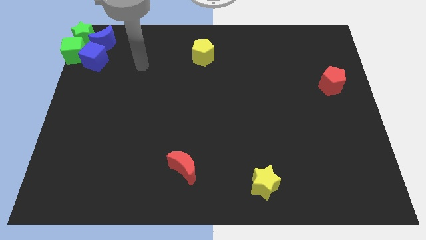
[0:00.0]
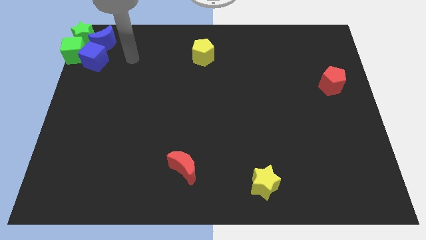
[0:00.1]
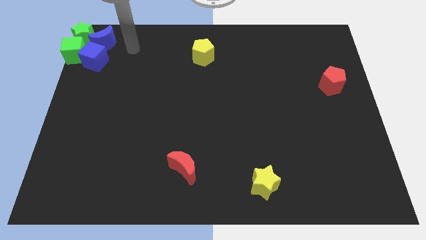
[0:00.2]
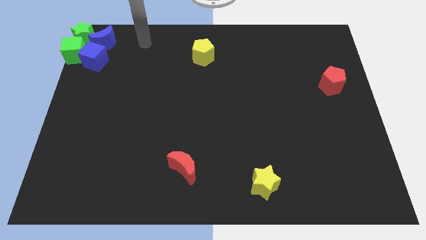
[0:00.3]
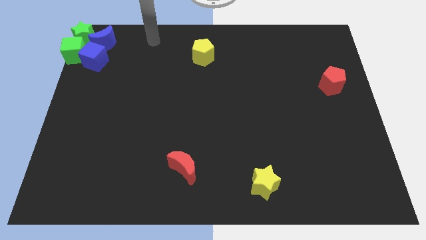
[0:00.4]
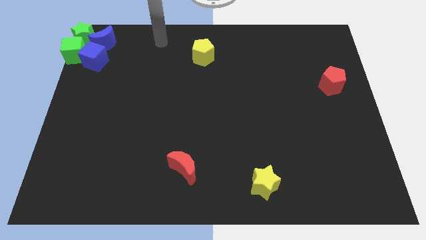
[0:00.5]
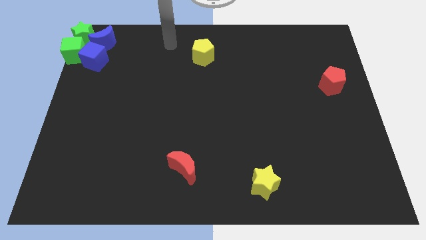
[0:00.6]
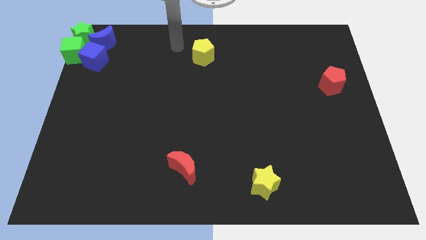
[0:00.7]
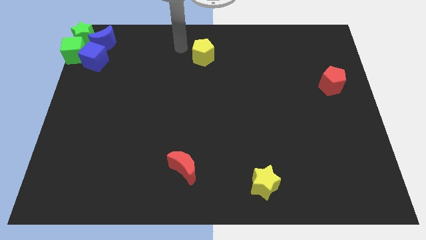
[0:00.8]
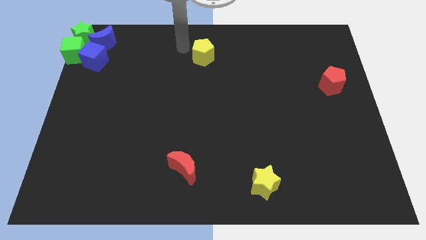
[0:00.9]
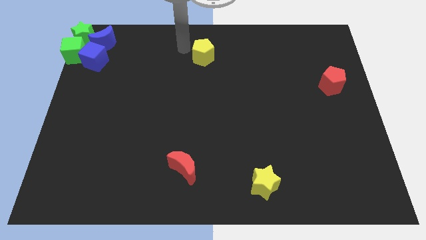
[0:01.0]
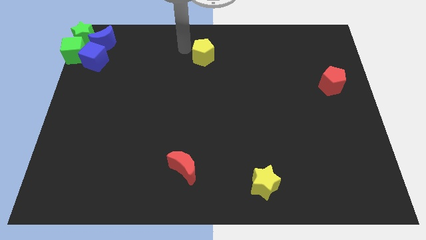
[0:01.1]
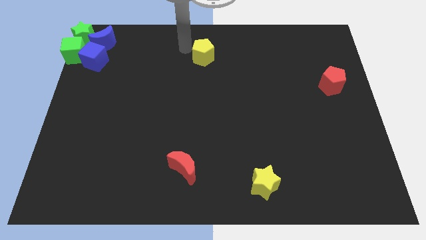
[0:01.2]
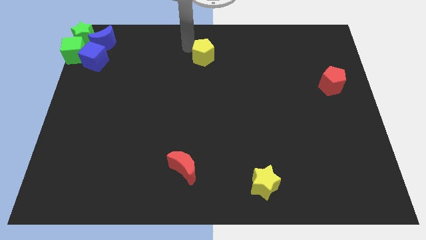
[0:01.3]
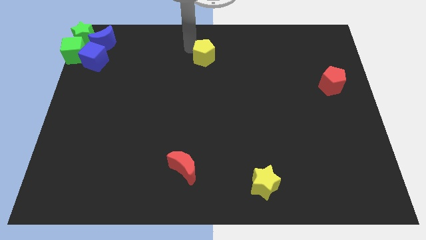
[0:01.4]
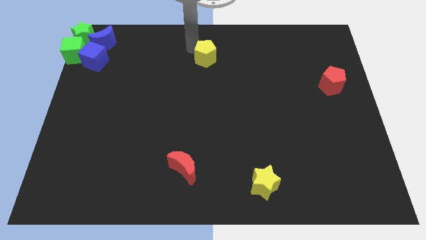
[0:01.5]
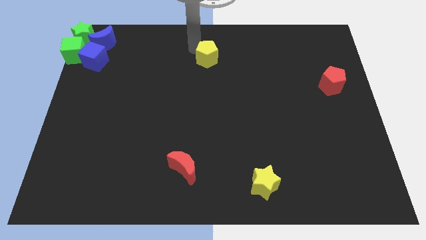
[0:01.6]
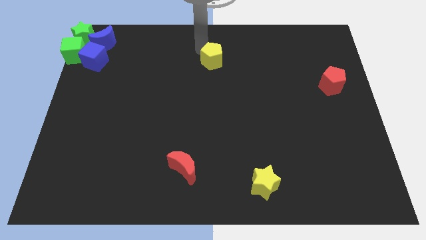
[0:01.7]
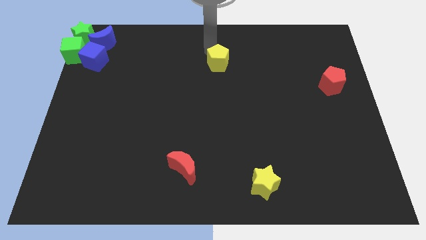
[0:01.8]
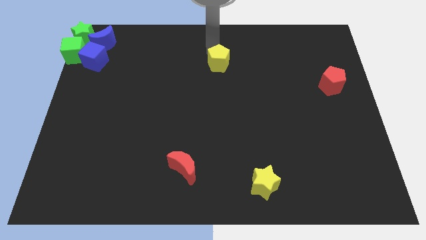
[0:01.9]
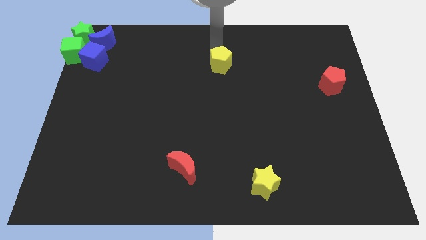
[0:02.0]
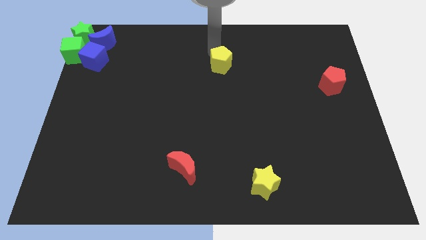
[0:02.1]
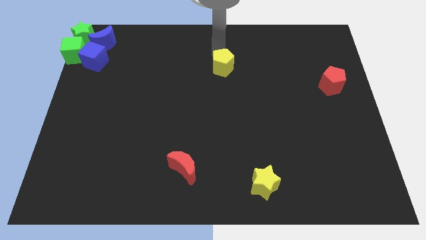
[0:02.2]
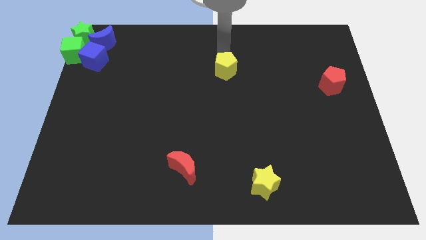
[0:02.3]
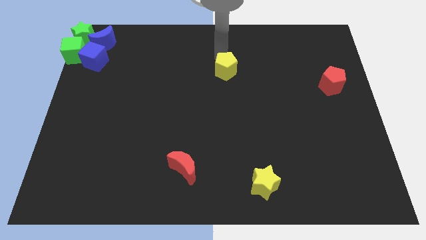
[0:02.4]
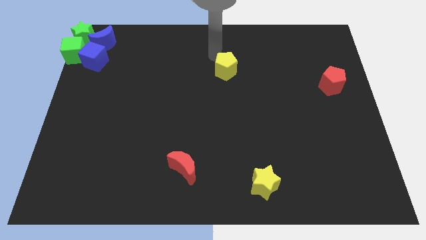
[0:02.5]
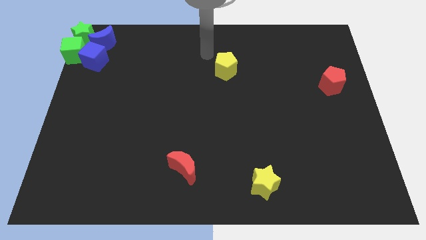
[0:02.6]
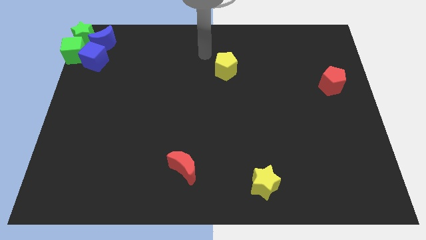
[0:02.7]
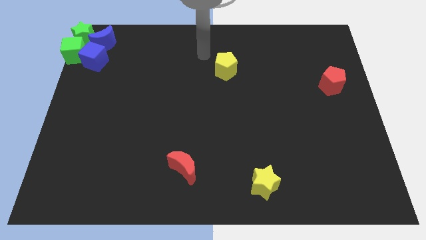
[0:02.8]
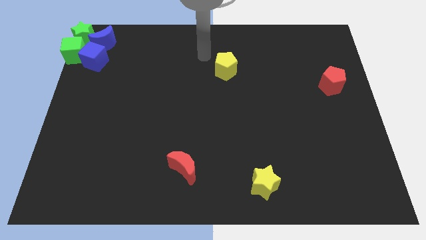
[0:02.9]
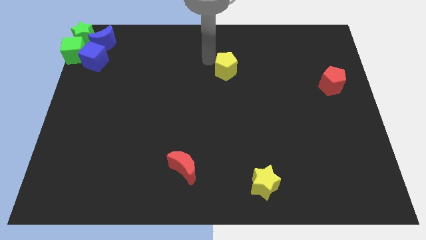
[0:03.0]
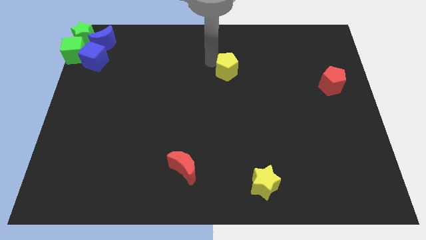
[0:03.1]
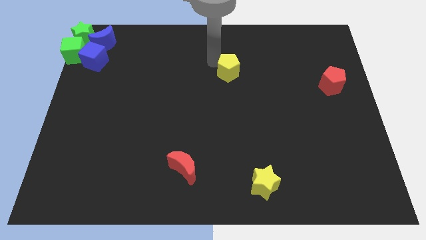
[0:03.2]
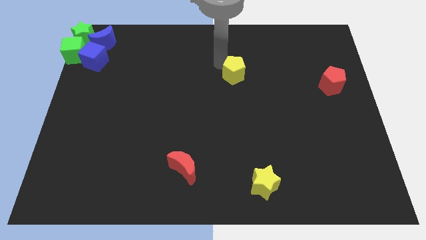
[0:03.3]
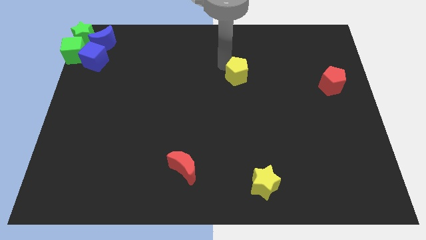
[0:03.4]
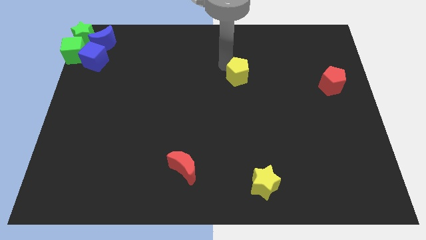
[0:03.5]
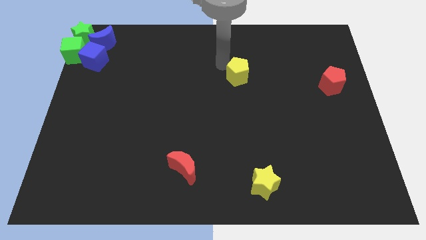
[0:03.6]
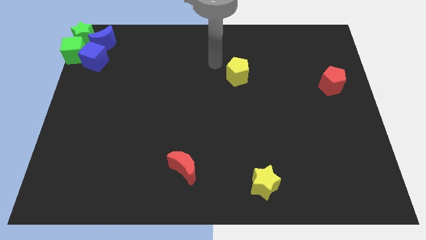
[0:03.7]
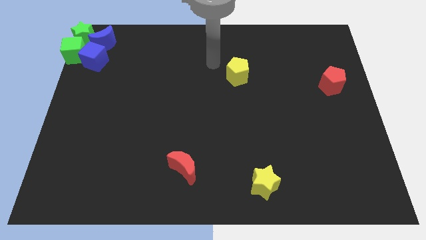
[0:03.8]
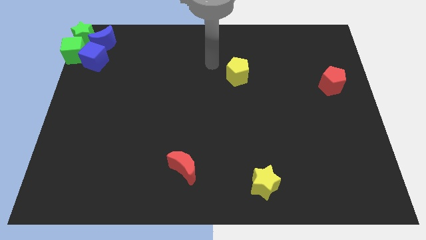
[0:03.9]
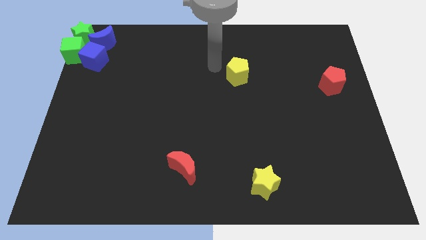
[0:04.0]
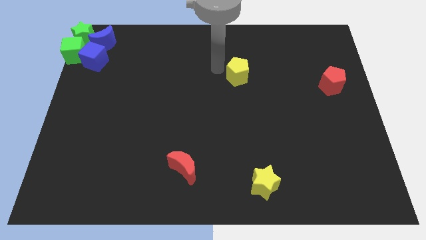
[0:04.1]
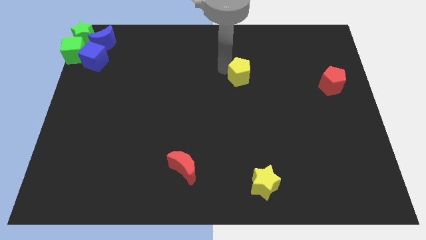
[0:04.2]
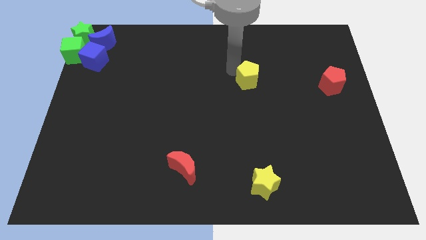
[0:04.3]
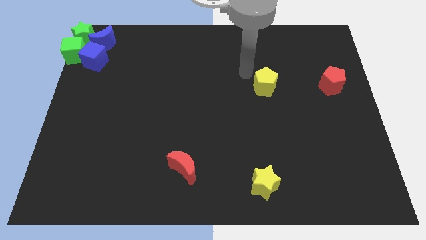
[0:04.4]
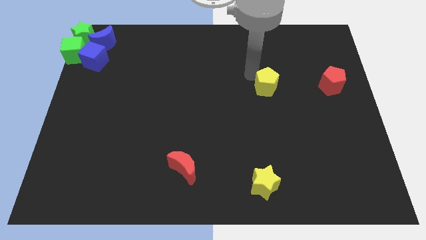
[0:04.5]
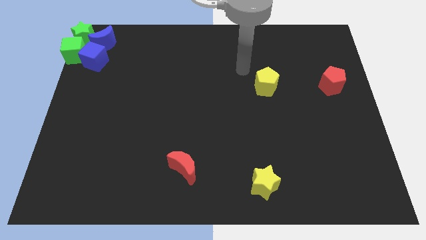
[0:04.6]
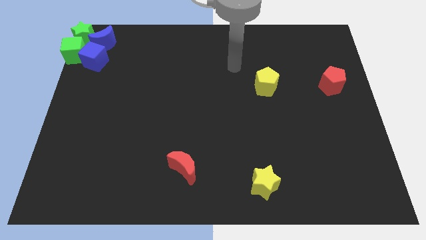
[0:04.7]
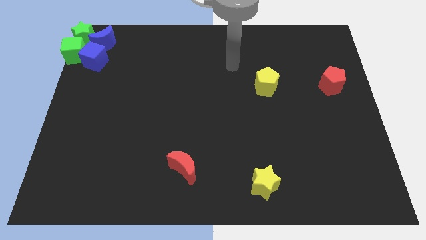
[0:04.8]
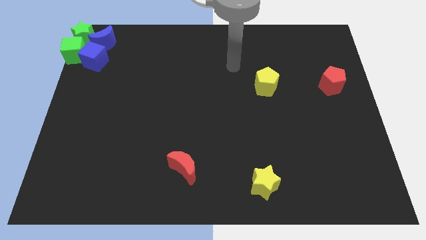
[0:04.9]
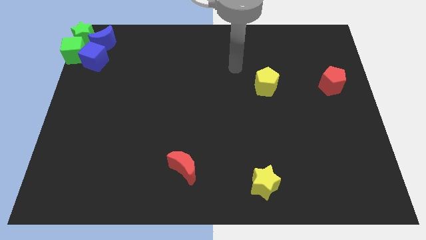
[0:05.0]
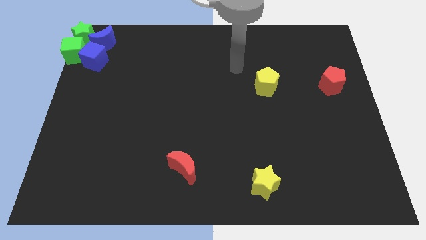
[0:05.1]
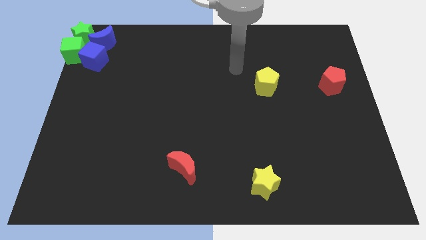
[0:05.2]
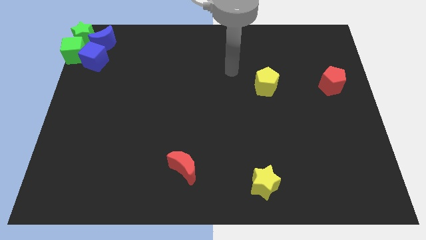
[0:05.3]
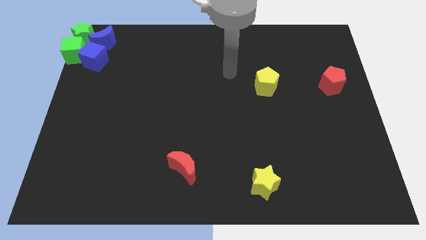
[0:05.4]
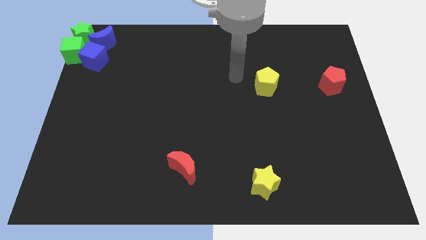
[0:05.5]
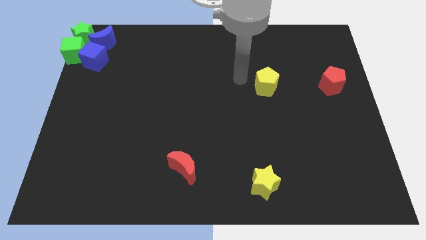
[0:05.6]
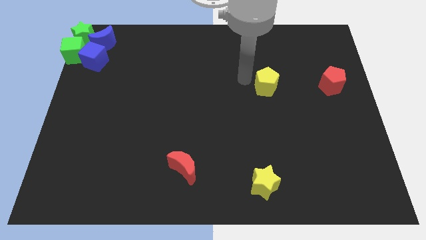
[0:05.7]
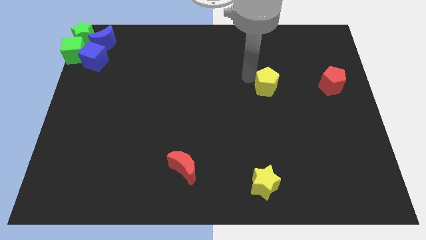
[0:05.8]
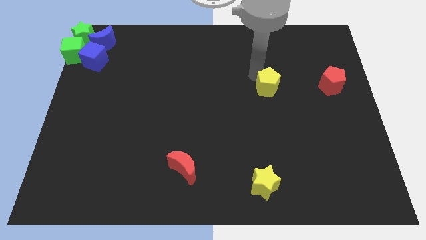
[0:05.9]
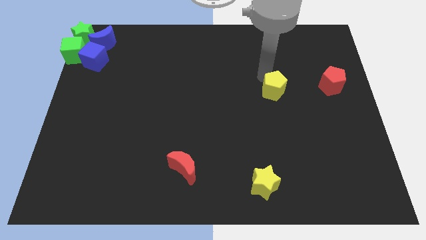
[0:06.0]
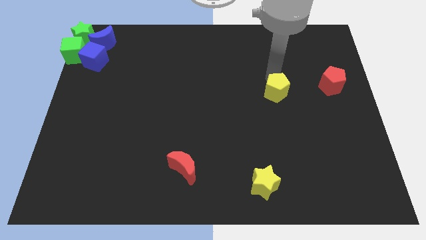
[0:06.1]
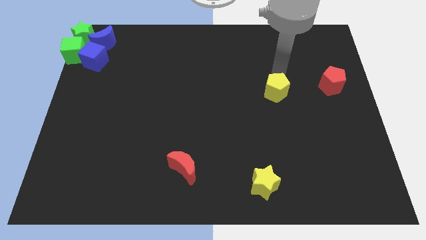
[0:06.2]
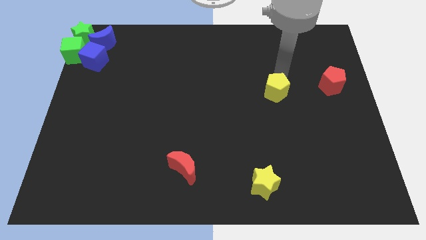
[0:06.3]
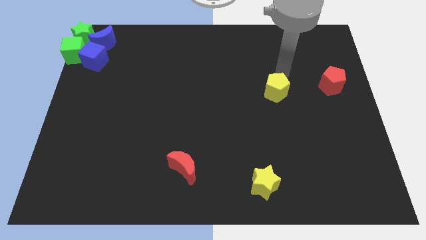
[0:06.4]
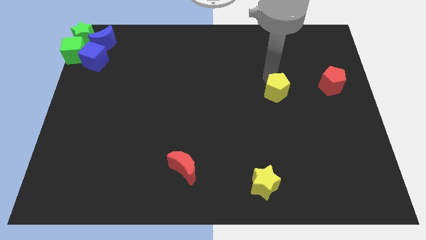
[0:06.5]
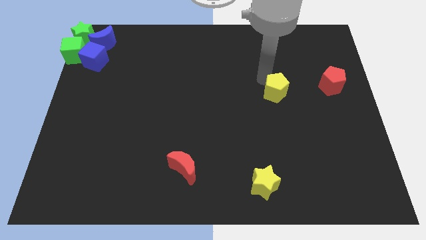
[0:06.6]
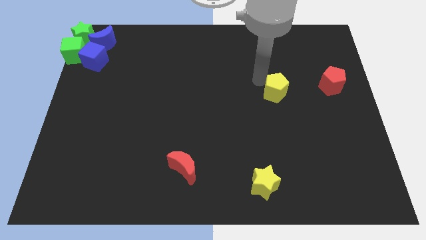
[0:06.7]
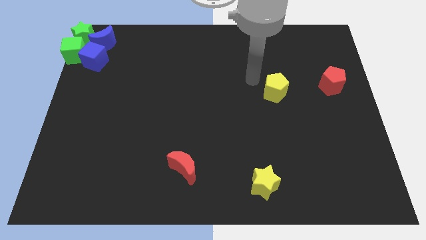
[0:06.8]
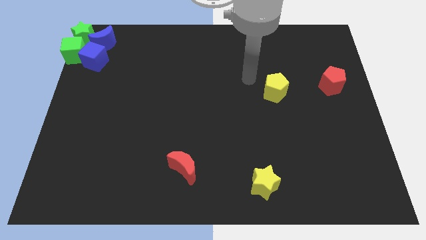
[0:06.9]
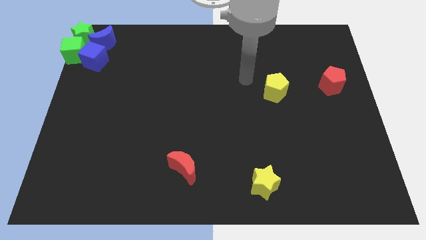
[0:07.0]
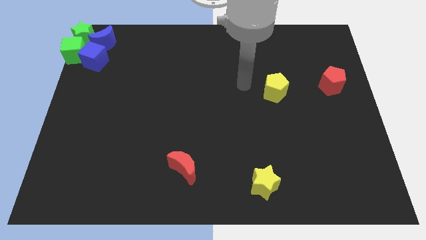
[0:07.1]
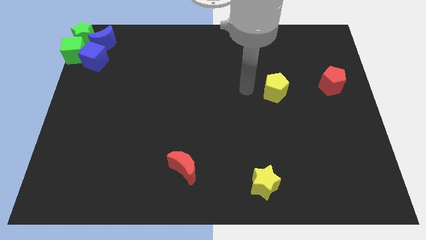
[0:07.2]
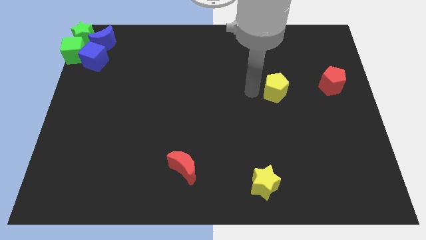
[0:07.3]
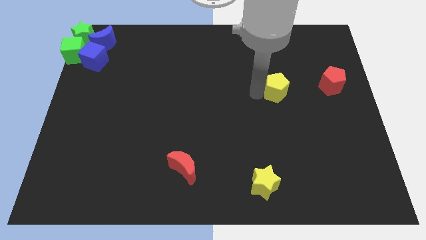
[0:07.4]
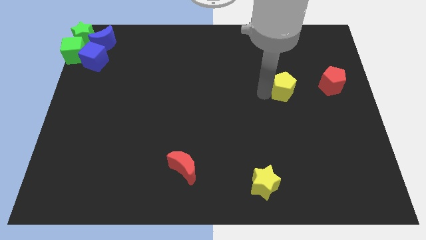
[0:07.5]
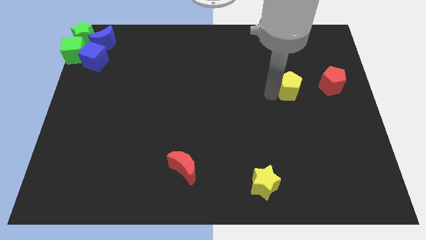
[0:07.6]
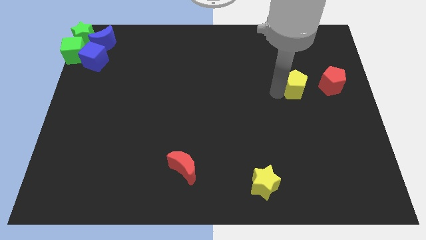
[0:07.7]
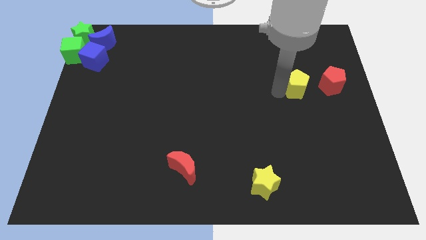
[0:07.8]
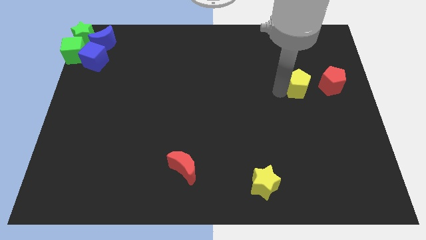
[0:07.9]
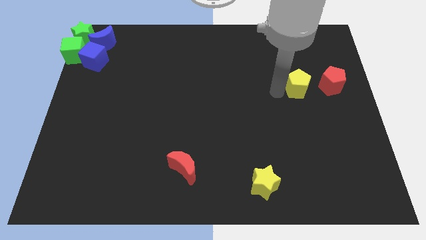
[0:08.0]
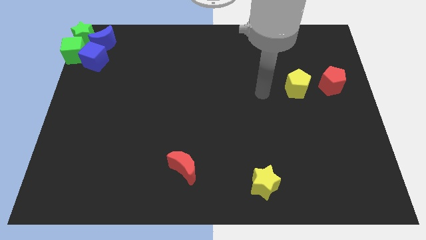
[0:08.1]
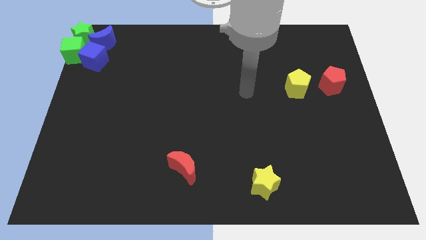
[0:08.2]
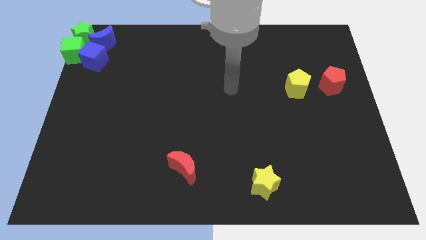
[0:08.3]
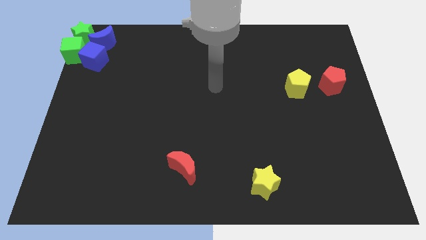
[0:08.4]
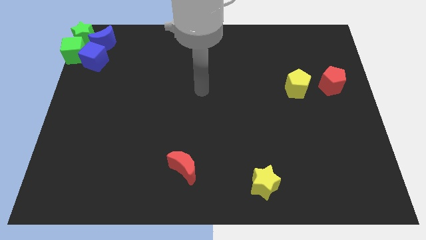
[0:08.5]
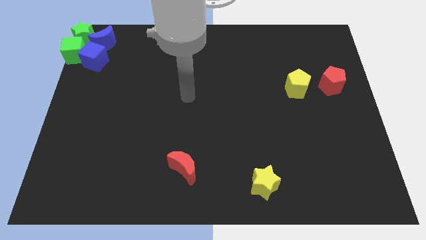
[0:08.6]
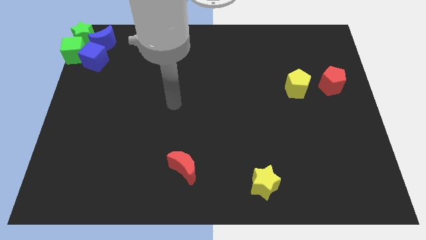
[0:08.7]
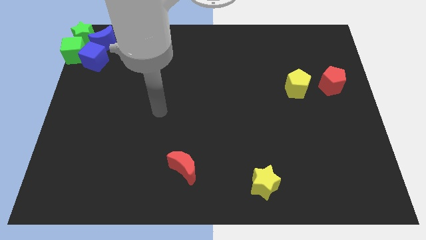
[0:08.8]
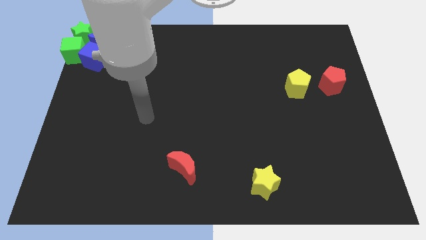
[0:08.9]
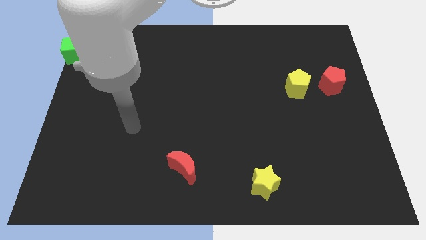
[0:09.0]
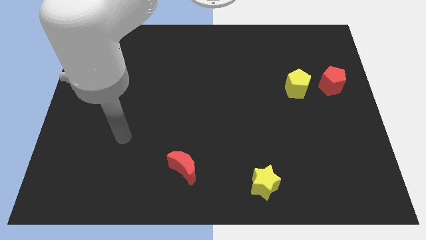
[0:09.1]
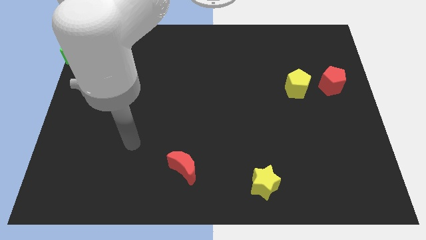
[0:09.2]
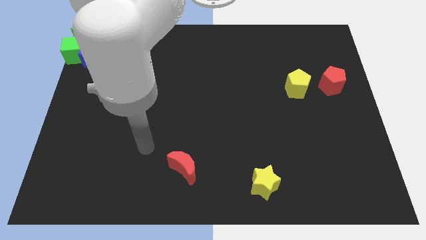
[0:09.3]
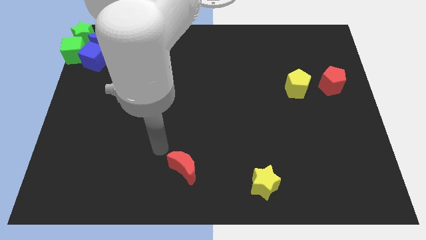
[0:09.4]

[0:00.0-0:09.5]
move the yellow pentagon to the left of the red pentagon
